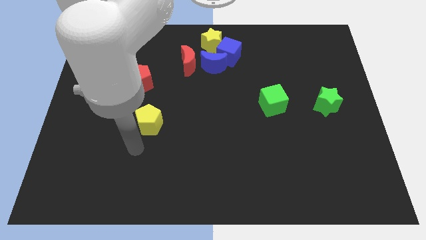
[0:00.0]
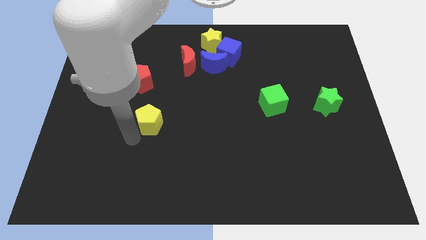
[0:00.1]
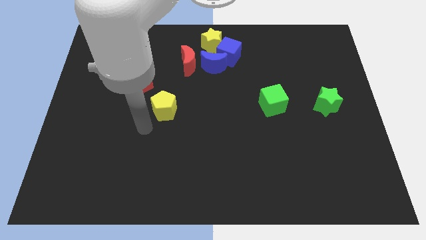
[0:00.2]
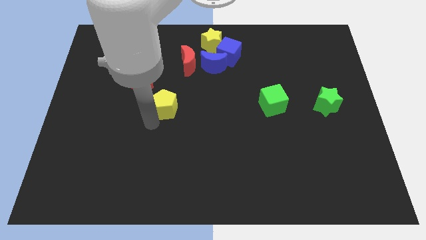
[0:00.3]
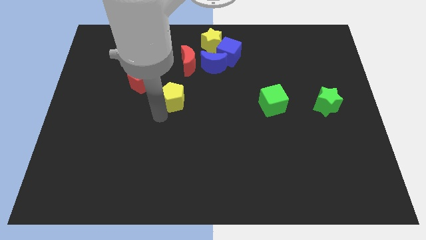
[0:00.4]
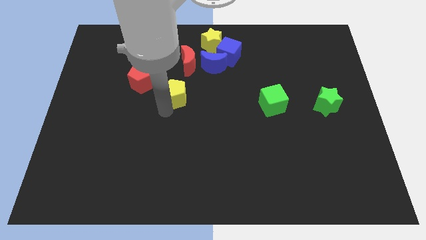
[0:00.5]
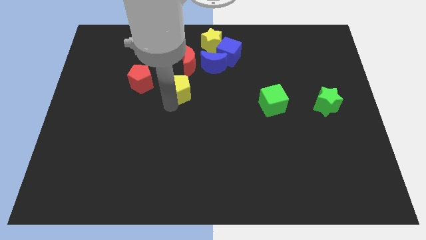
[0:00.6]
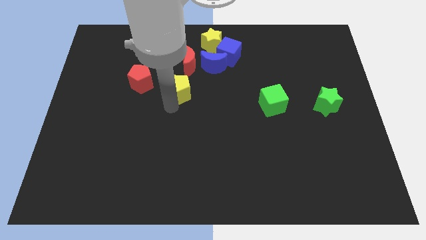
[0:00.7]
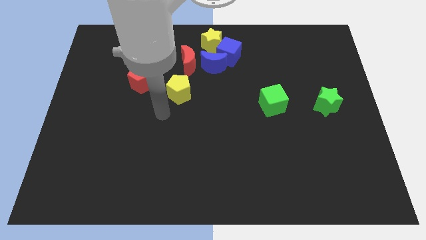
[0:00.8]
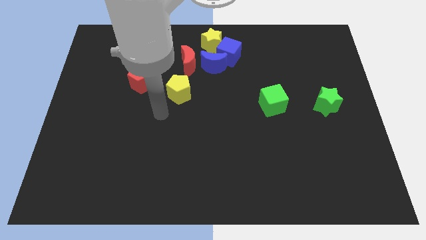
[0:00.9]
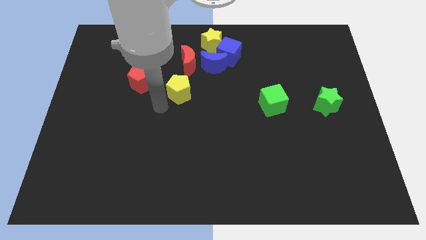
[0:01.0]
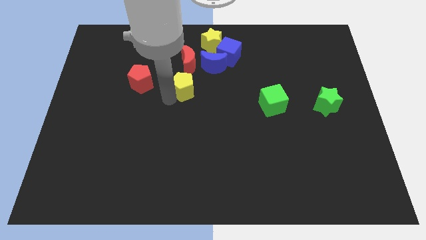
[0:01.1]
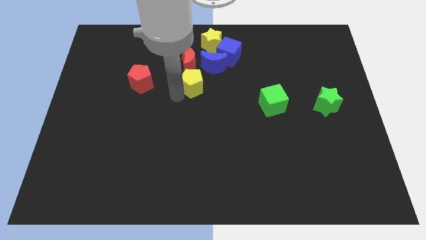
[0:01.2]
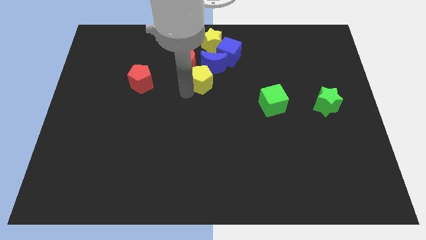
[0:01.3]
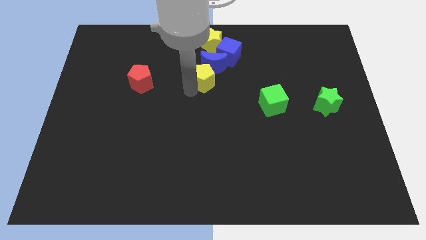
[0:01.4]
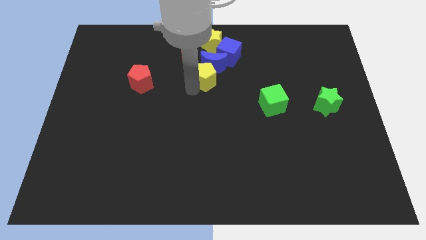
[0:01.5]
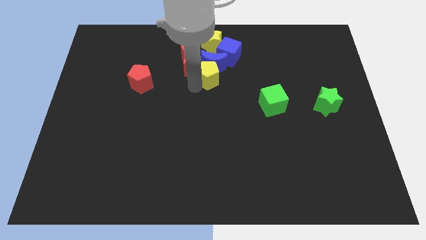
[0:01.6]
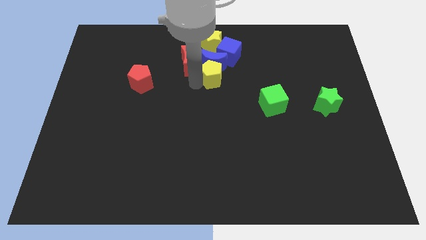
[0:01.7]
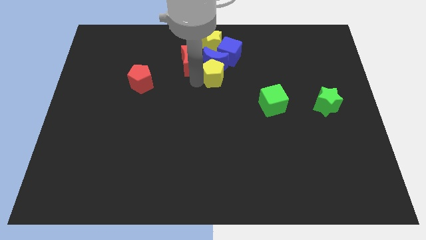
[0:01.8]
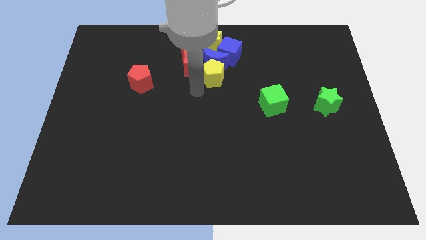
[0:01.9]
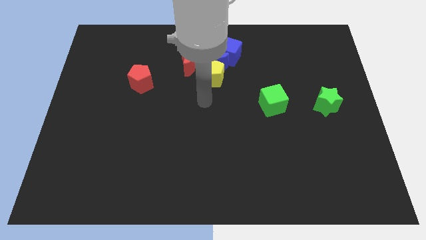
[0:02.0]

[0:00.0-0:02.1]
push the yellow pentagon into the blue crescent

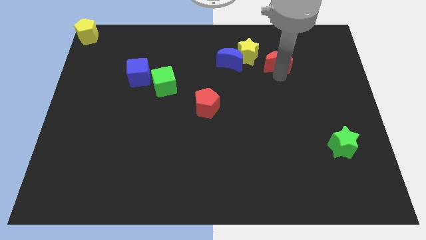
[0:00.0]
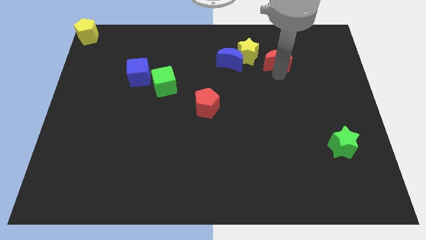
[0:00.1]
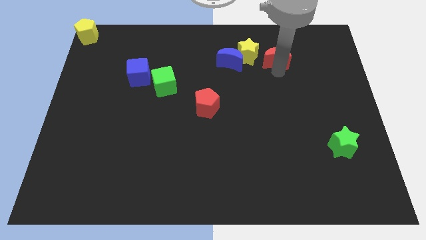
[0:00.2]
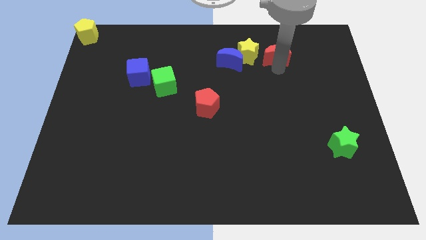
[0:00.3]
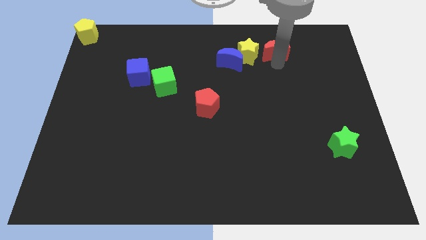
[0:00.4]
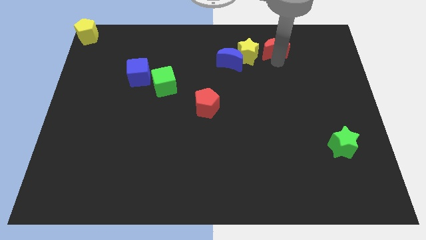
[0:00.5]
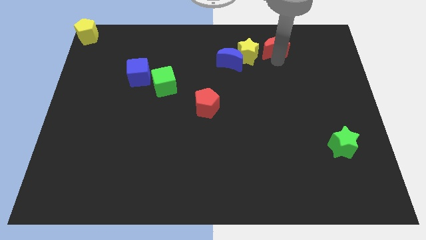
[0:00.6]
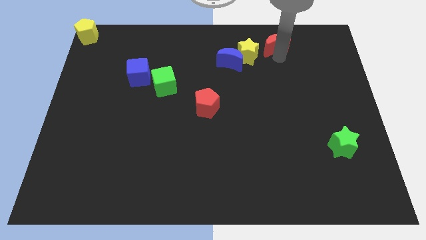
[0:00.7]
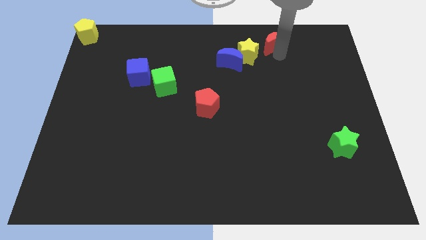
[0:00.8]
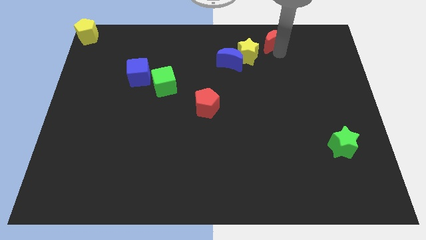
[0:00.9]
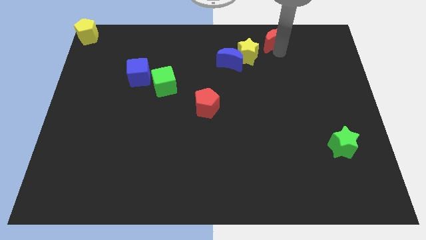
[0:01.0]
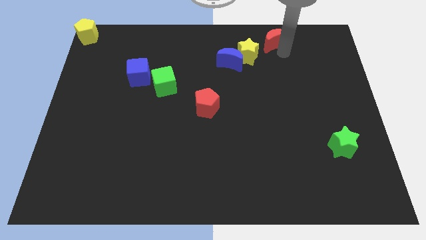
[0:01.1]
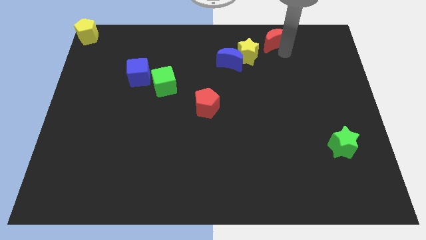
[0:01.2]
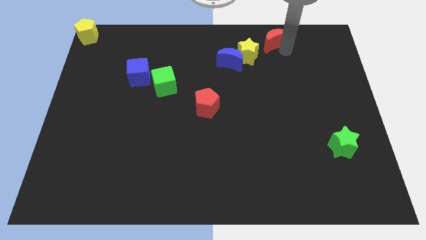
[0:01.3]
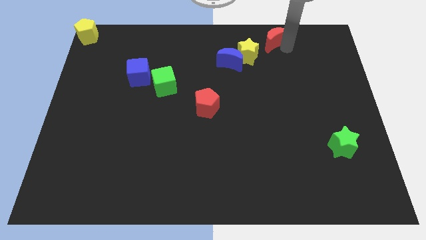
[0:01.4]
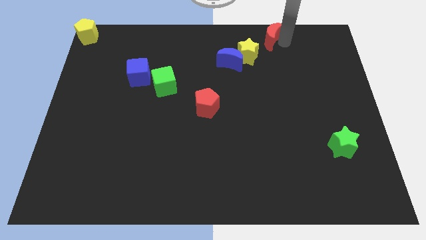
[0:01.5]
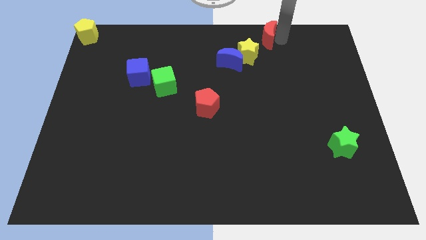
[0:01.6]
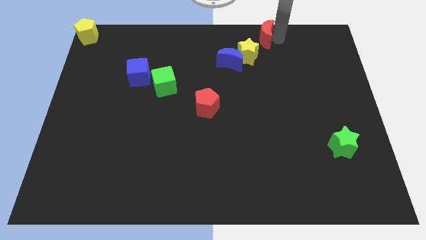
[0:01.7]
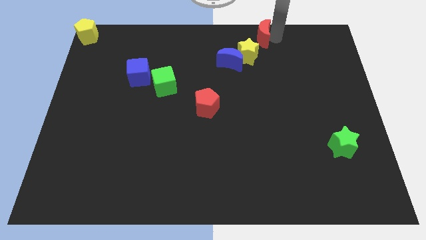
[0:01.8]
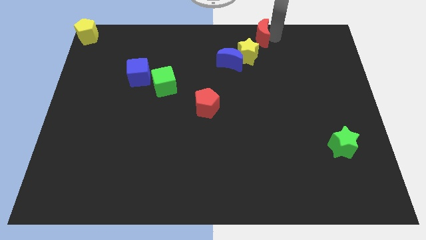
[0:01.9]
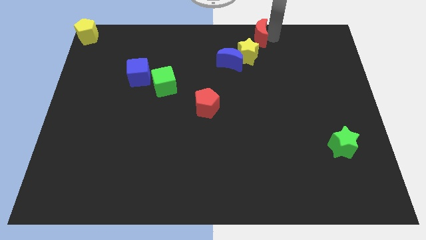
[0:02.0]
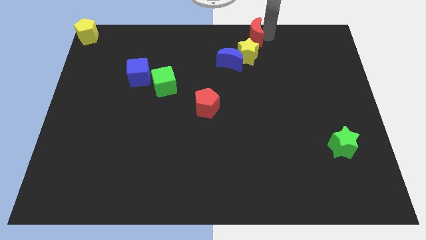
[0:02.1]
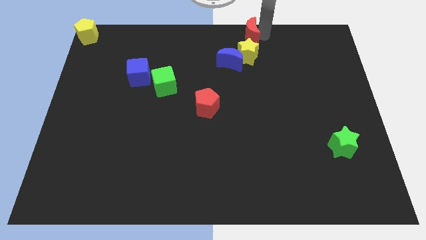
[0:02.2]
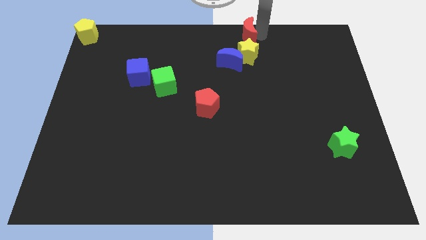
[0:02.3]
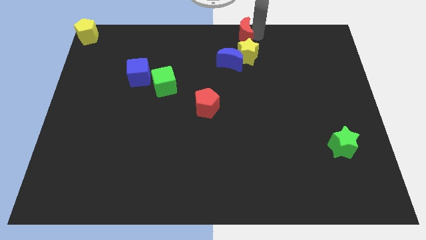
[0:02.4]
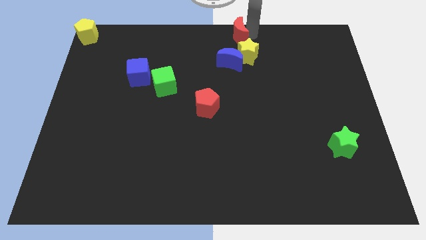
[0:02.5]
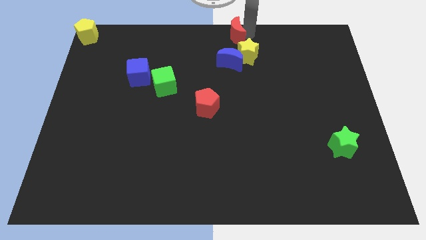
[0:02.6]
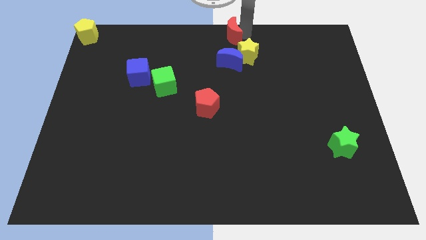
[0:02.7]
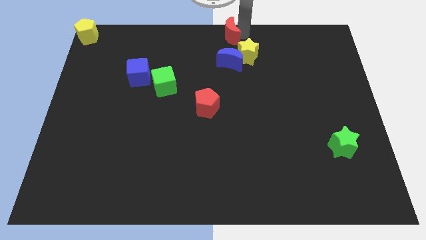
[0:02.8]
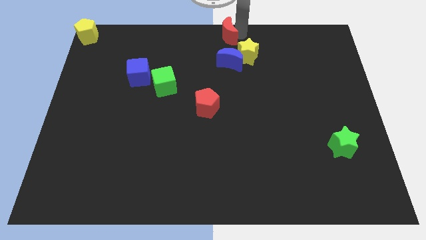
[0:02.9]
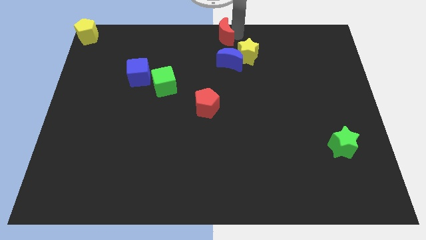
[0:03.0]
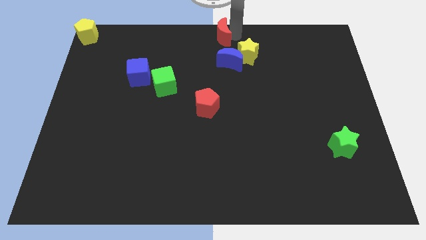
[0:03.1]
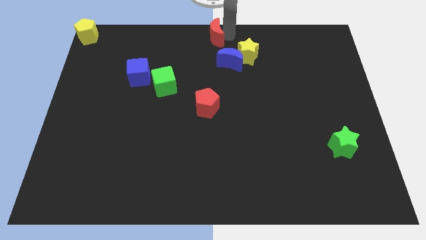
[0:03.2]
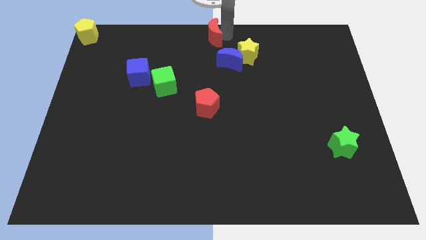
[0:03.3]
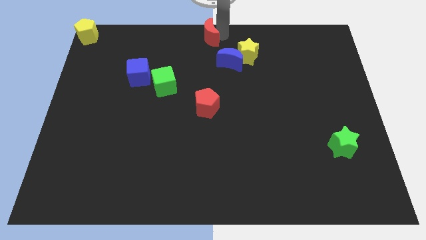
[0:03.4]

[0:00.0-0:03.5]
place the red crescent above the blue crescent

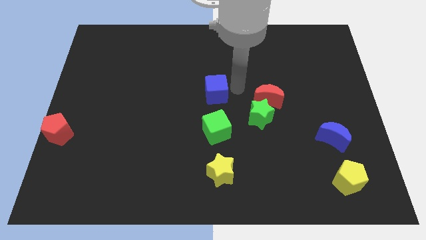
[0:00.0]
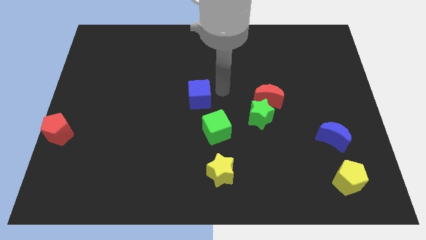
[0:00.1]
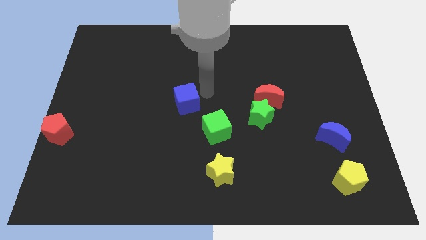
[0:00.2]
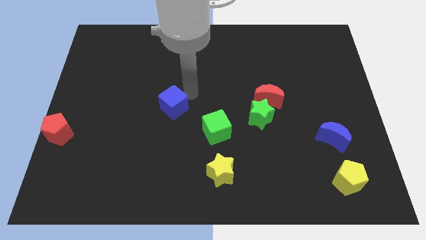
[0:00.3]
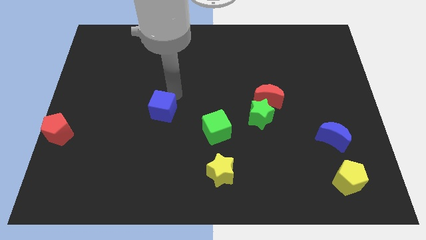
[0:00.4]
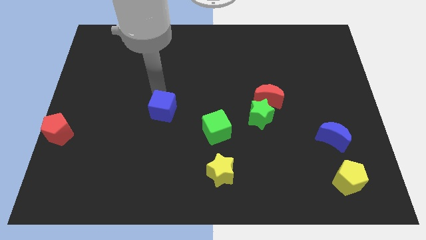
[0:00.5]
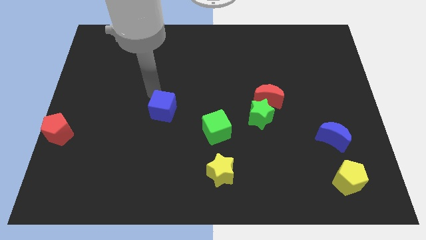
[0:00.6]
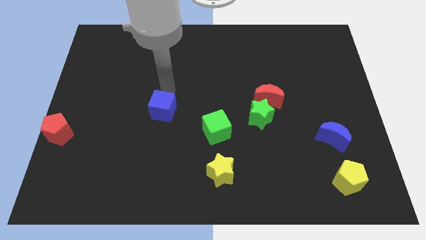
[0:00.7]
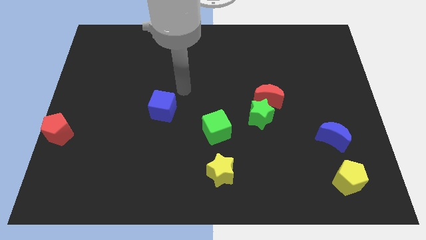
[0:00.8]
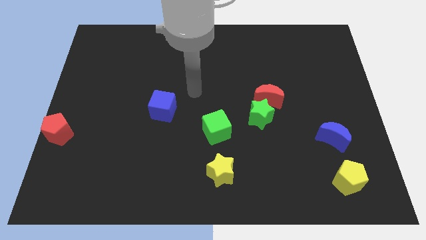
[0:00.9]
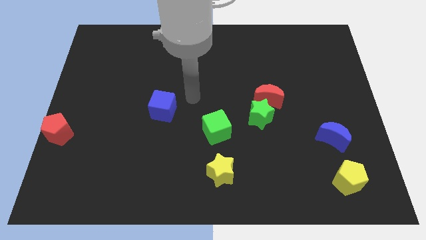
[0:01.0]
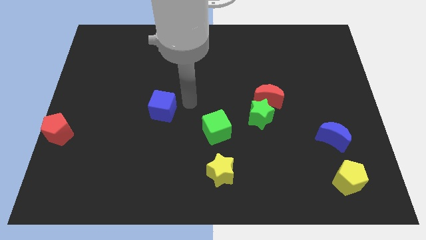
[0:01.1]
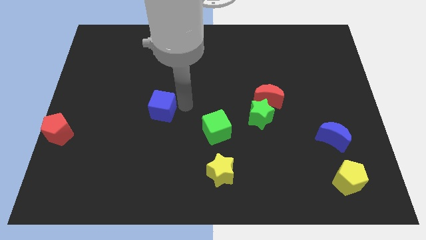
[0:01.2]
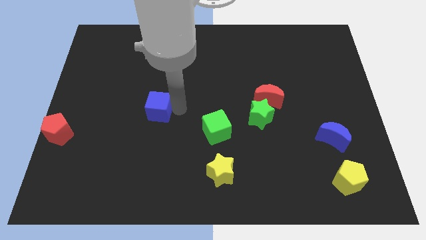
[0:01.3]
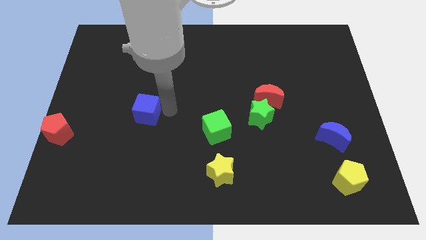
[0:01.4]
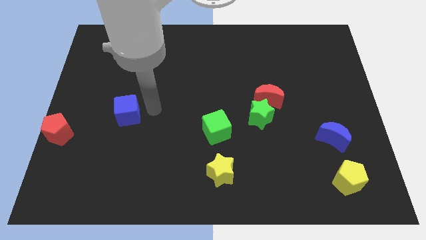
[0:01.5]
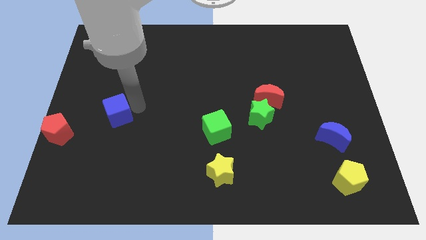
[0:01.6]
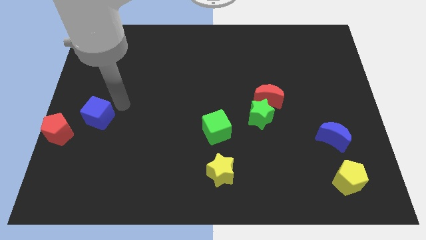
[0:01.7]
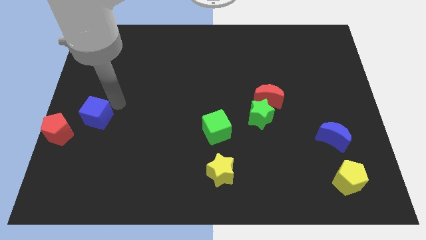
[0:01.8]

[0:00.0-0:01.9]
push the blue cube towards diagnol to the red pentagon

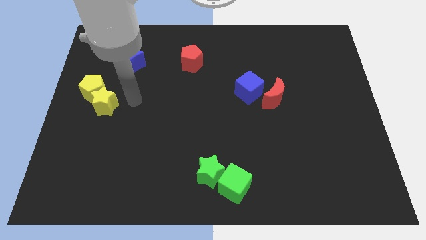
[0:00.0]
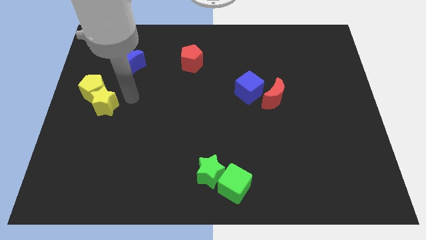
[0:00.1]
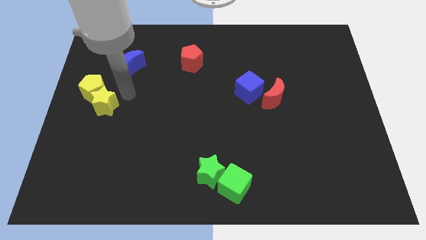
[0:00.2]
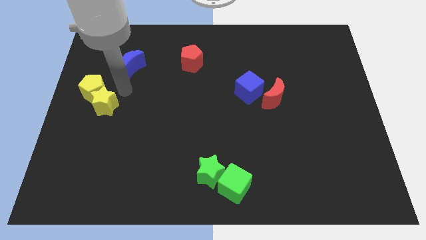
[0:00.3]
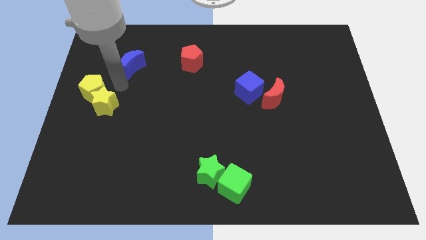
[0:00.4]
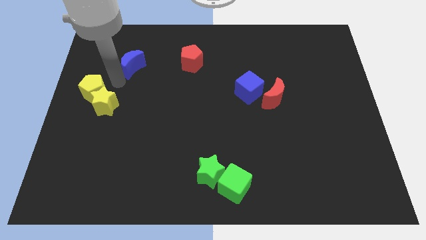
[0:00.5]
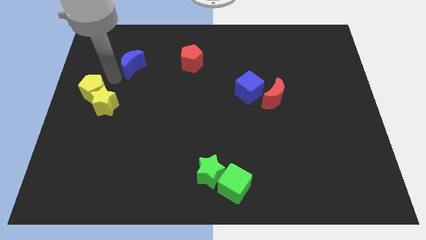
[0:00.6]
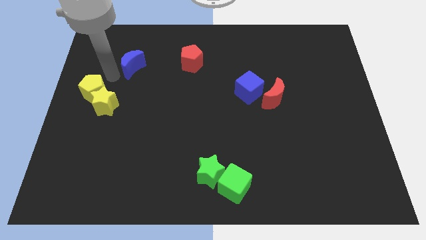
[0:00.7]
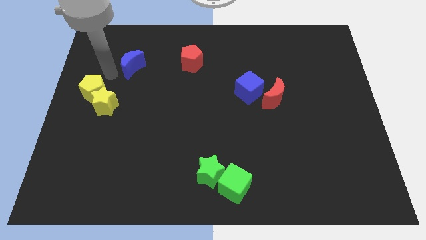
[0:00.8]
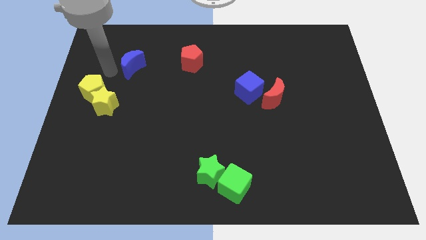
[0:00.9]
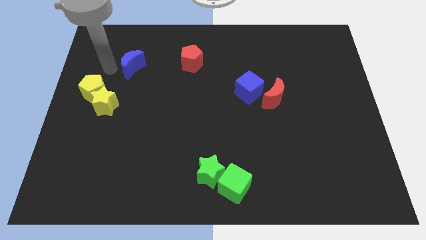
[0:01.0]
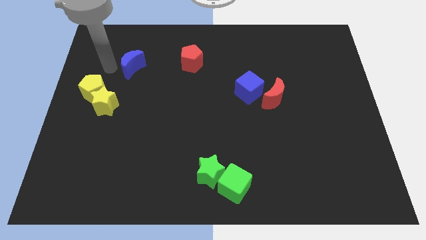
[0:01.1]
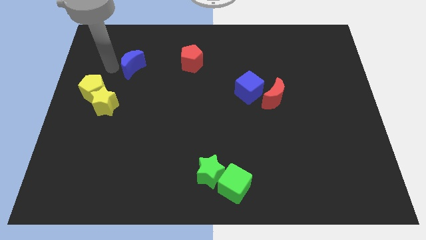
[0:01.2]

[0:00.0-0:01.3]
move the arm left to the blue crescent
